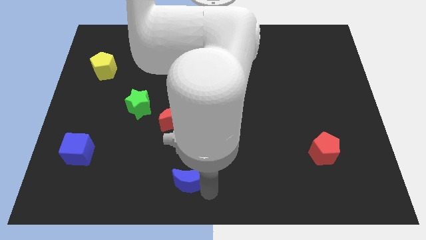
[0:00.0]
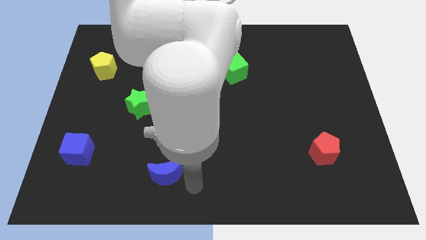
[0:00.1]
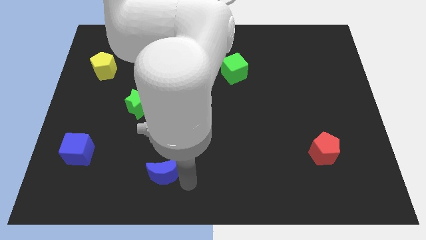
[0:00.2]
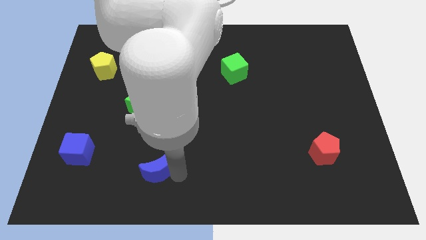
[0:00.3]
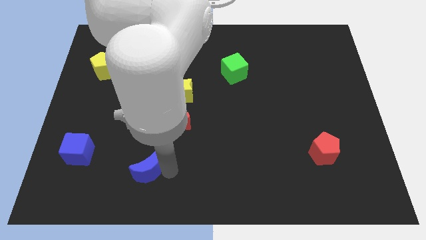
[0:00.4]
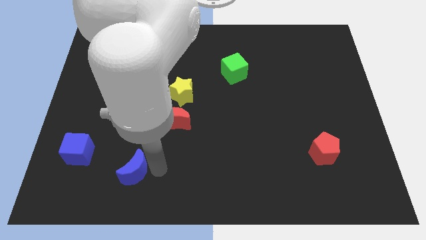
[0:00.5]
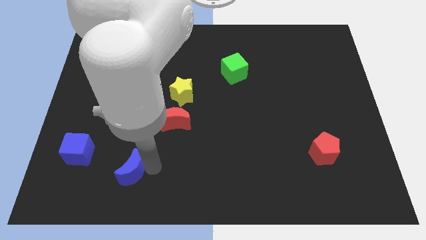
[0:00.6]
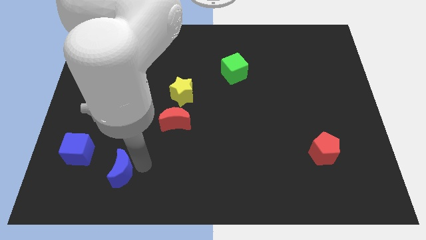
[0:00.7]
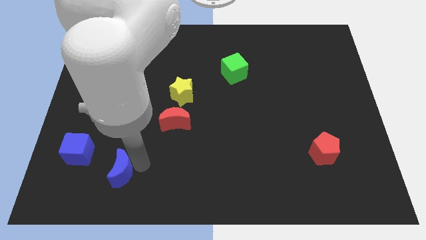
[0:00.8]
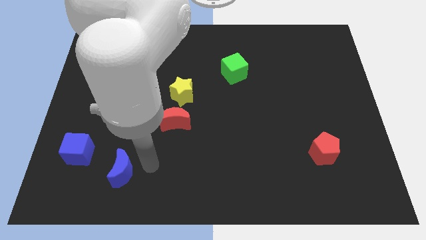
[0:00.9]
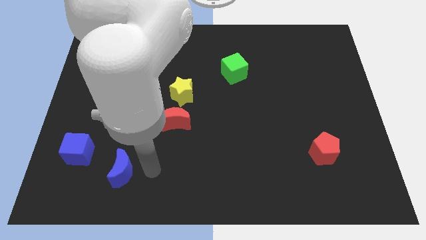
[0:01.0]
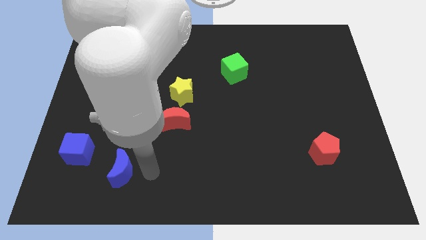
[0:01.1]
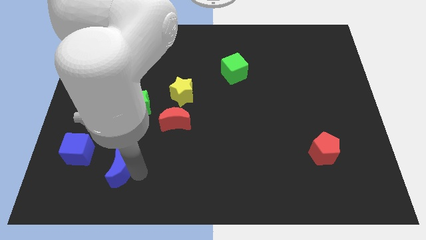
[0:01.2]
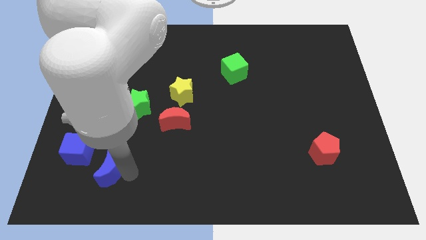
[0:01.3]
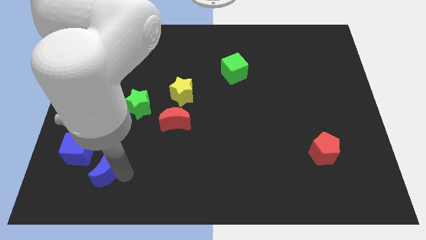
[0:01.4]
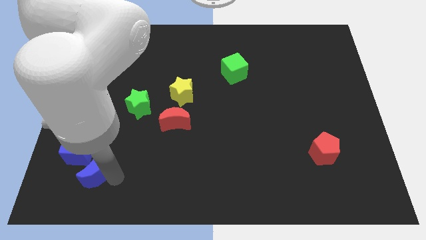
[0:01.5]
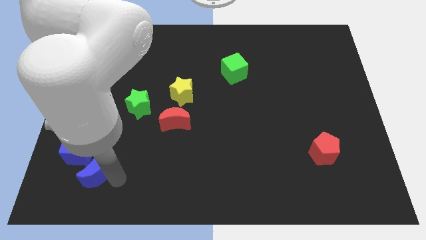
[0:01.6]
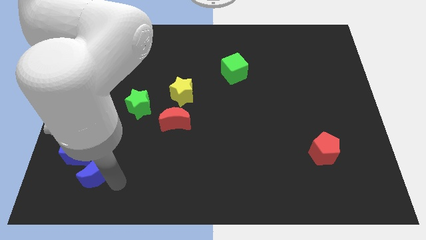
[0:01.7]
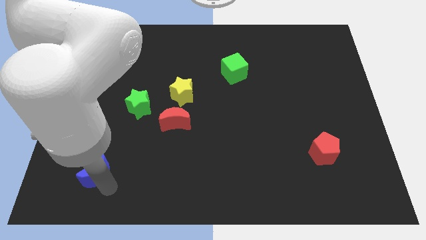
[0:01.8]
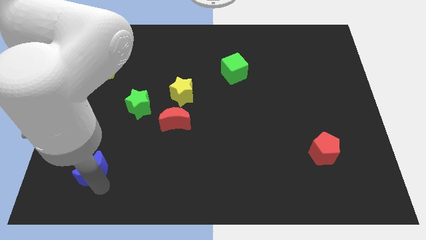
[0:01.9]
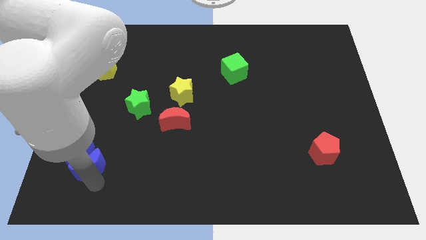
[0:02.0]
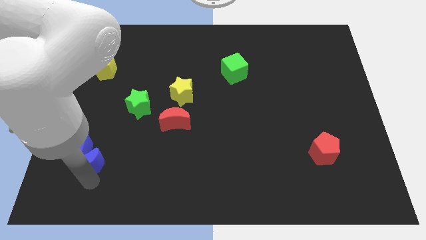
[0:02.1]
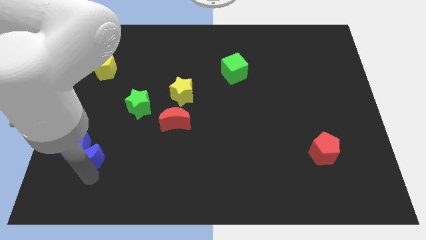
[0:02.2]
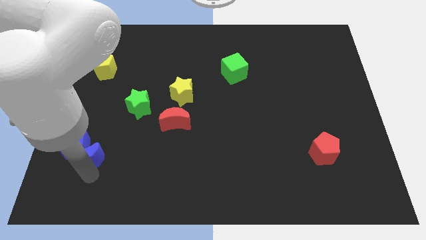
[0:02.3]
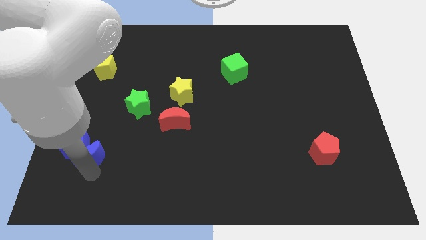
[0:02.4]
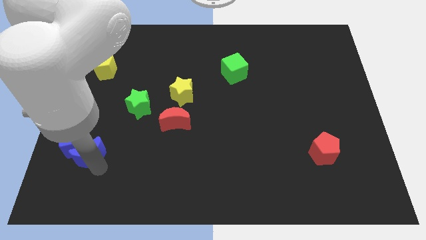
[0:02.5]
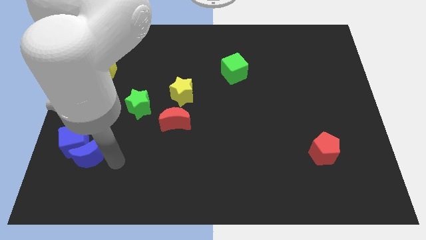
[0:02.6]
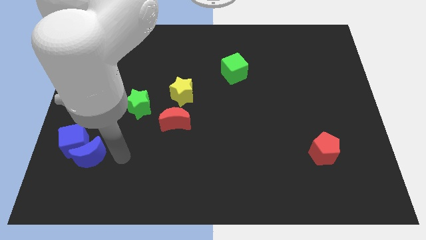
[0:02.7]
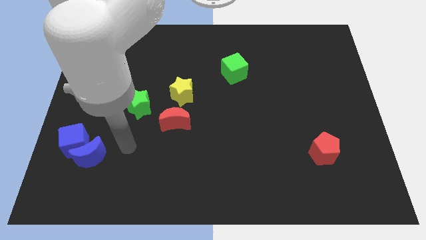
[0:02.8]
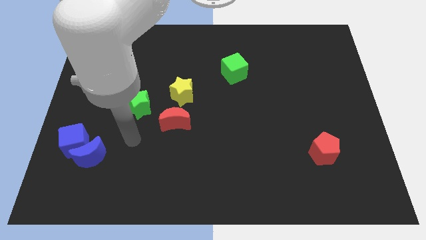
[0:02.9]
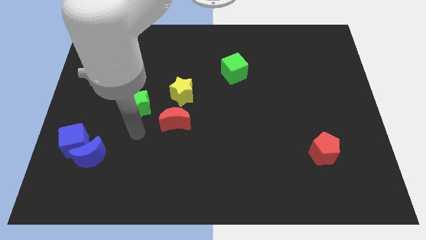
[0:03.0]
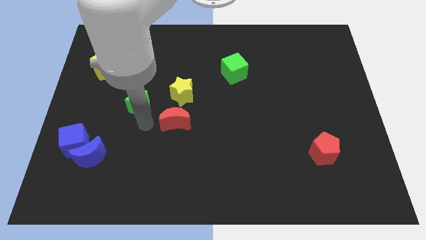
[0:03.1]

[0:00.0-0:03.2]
slide blue moon along with blue cube towards center left

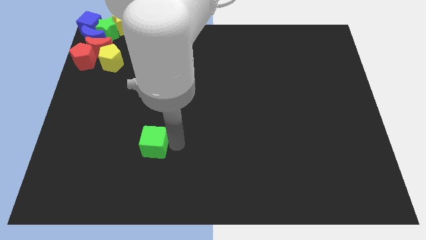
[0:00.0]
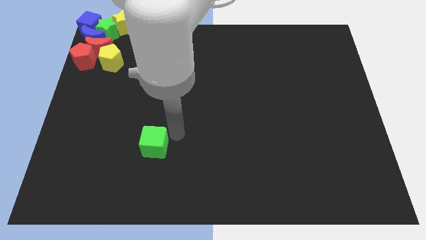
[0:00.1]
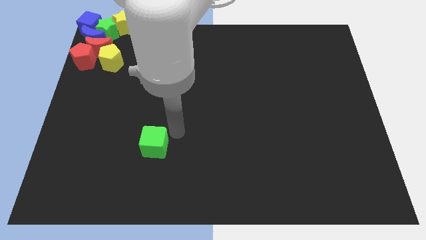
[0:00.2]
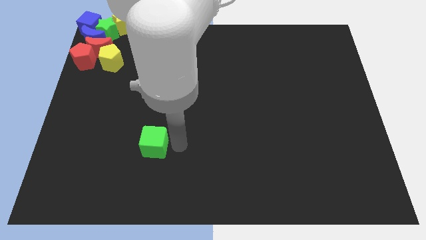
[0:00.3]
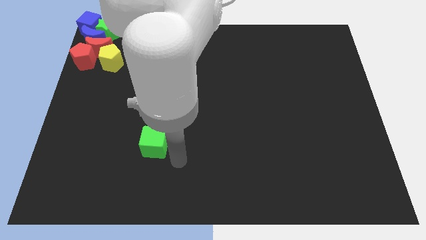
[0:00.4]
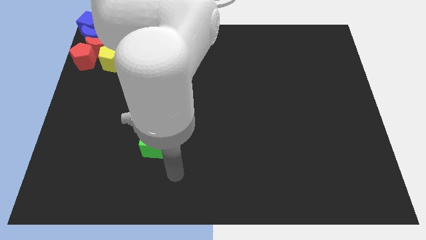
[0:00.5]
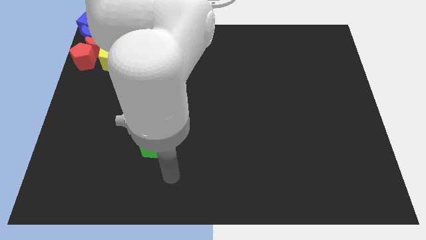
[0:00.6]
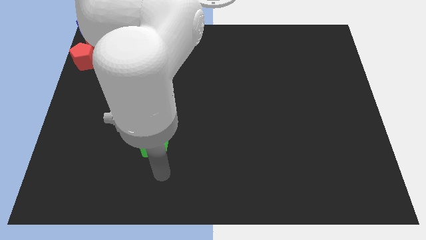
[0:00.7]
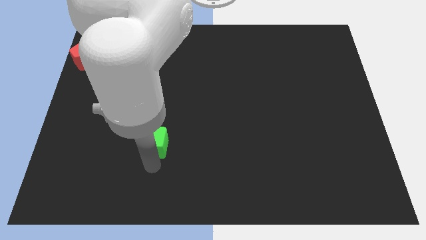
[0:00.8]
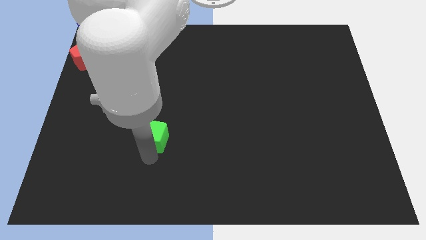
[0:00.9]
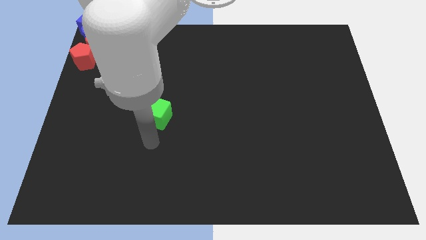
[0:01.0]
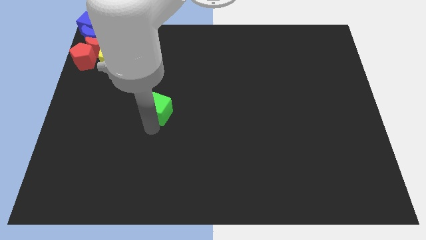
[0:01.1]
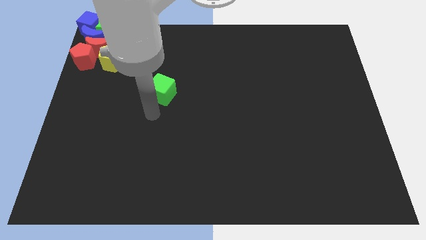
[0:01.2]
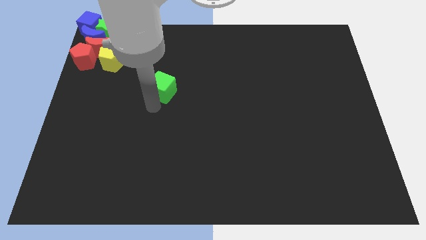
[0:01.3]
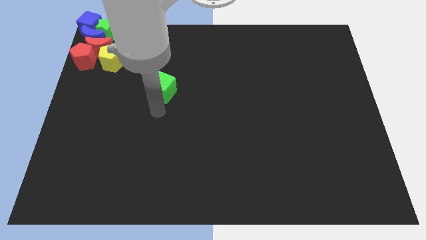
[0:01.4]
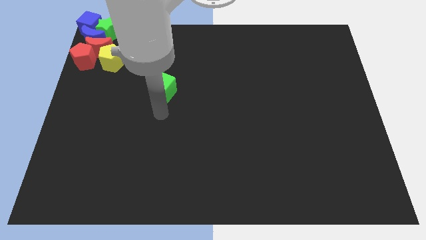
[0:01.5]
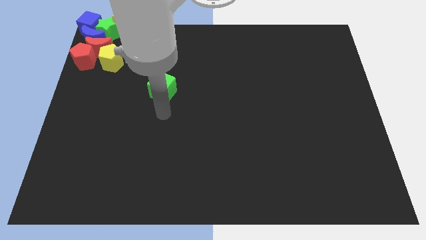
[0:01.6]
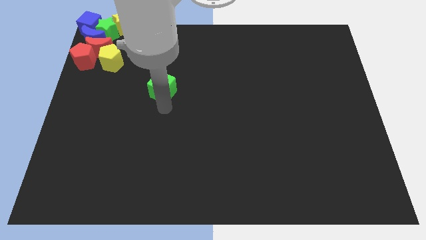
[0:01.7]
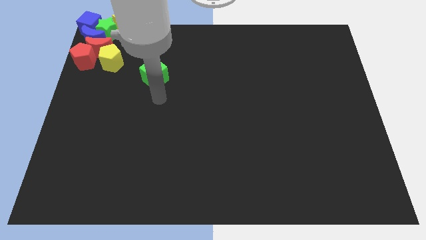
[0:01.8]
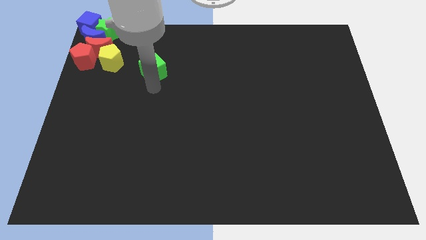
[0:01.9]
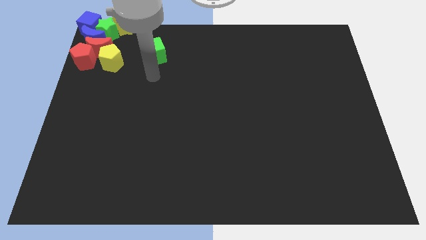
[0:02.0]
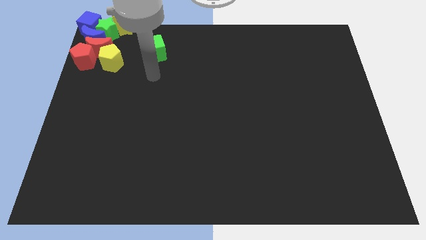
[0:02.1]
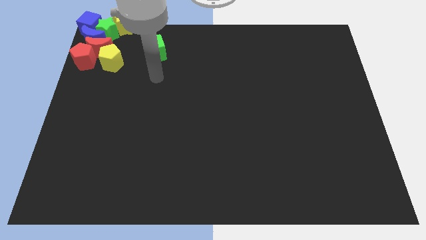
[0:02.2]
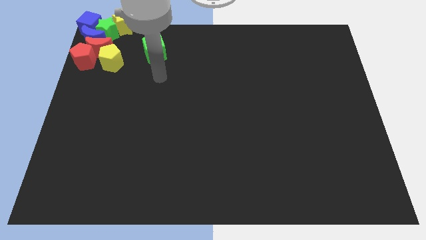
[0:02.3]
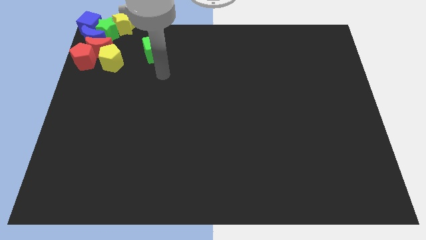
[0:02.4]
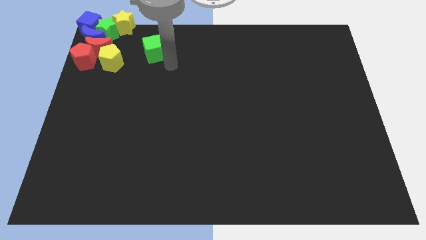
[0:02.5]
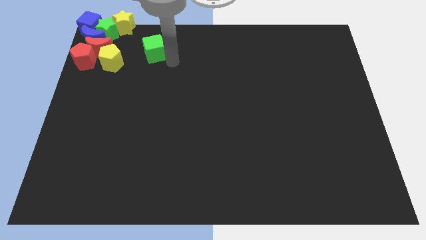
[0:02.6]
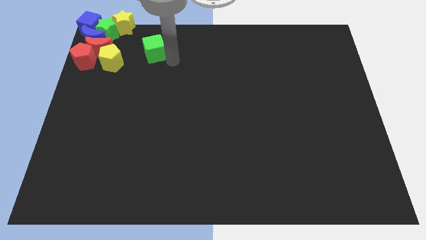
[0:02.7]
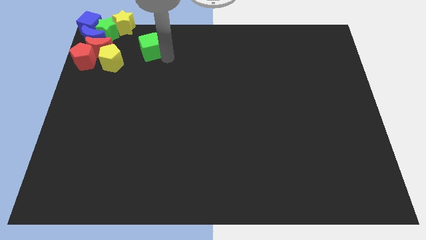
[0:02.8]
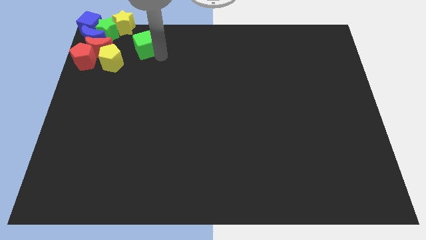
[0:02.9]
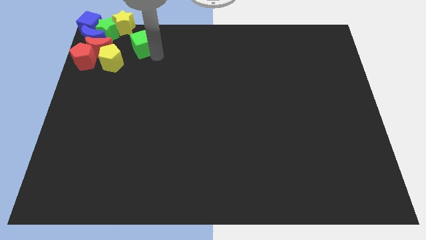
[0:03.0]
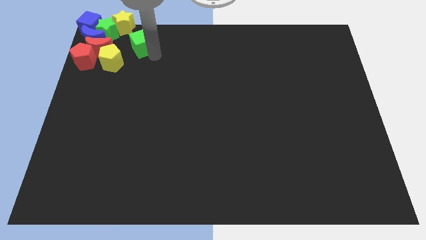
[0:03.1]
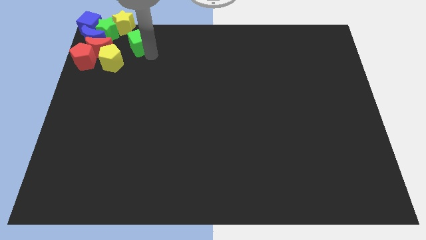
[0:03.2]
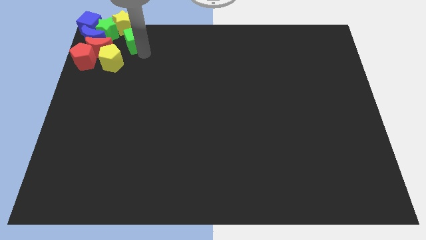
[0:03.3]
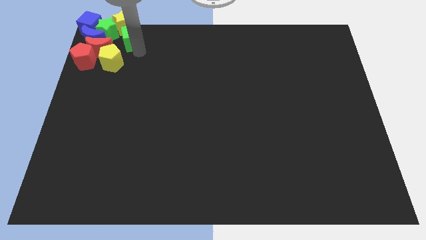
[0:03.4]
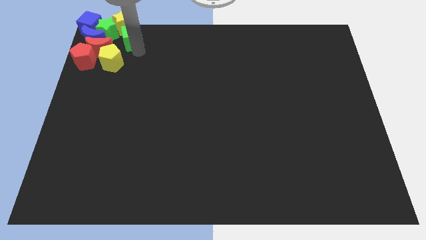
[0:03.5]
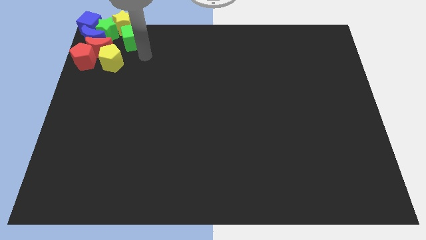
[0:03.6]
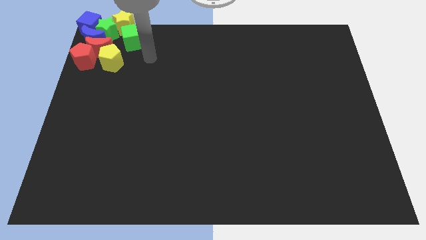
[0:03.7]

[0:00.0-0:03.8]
put the green cube diagonally top right to the yellow pentagon

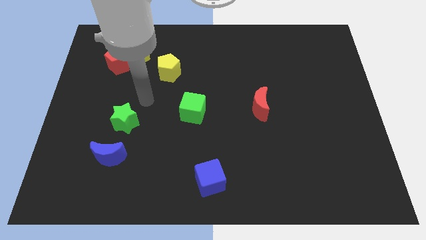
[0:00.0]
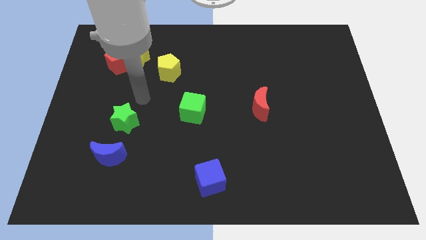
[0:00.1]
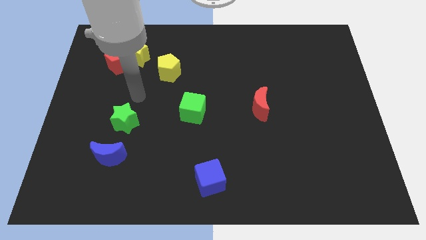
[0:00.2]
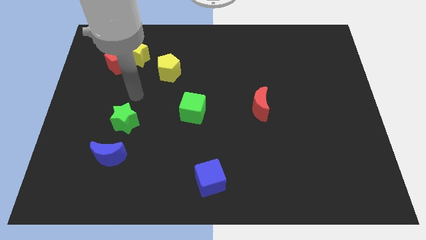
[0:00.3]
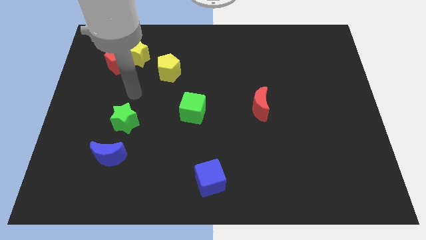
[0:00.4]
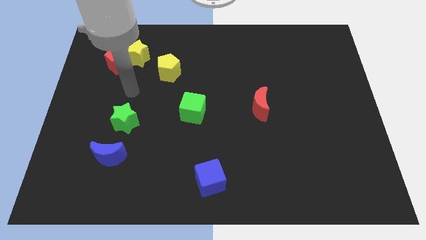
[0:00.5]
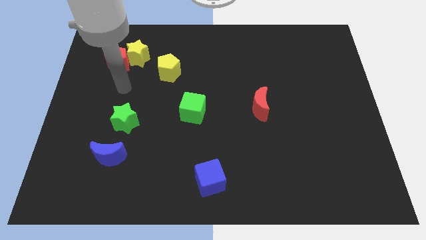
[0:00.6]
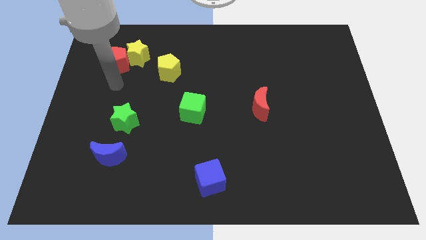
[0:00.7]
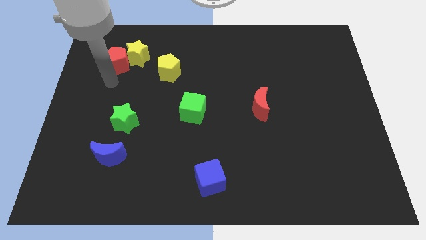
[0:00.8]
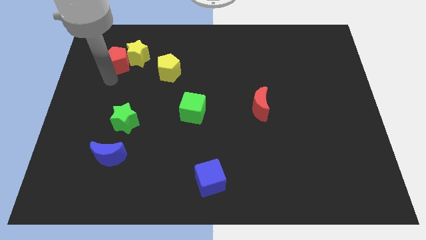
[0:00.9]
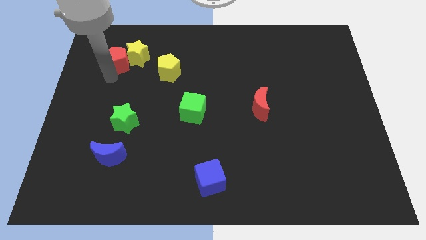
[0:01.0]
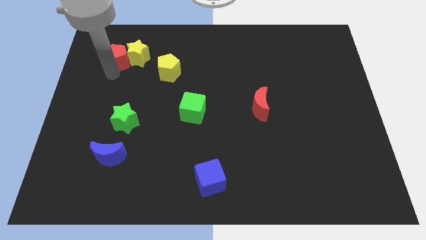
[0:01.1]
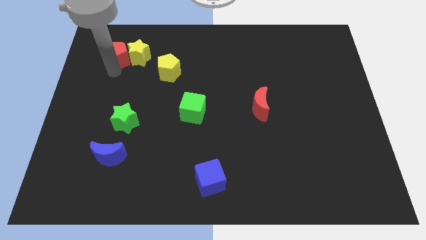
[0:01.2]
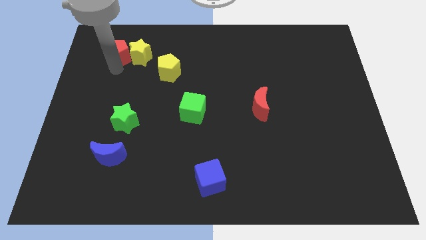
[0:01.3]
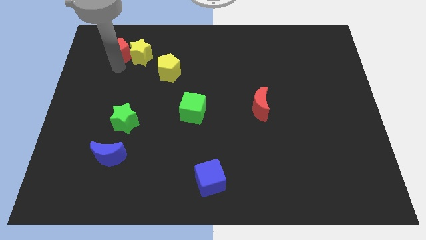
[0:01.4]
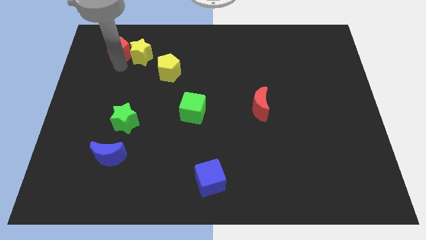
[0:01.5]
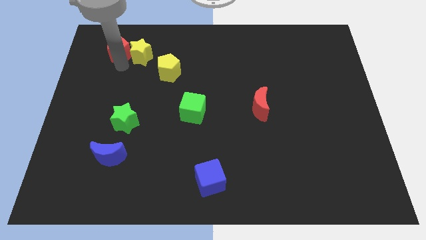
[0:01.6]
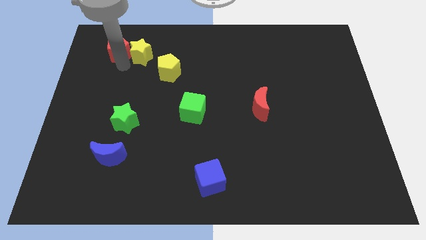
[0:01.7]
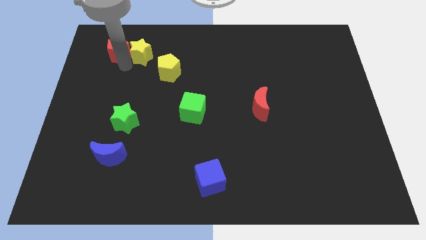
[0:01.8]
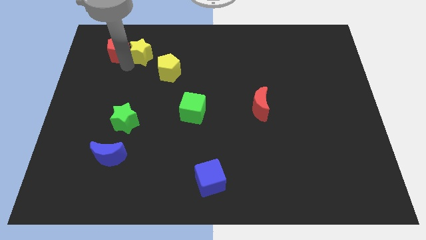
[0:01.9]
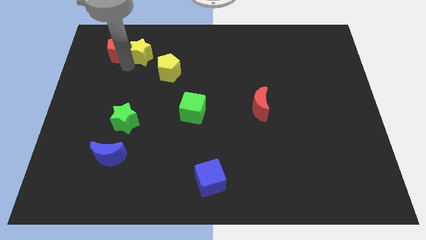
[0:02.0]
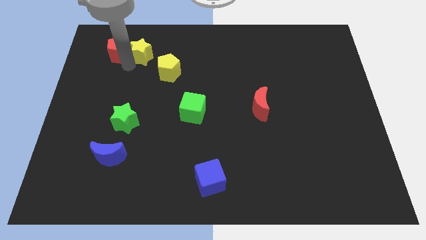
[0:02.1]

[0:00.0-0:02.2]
slightly push the red pentagon into yellow star
